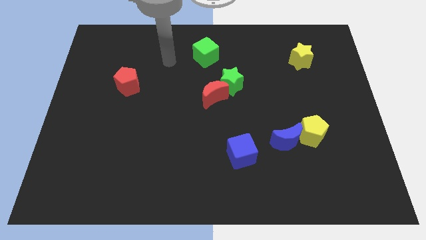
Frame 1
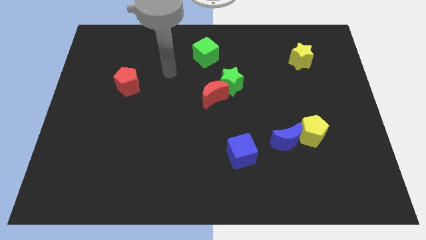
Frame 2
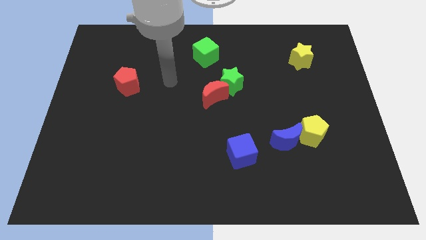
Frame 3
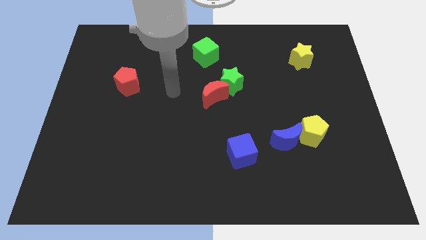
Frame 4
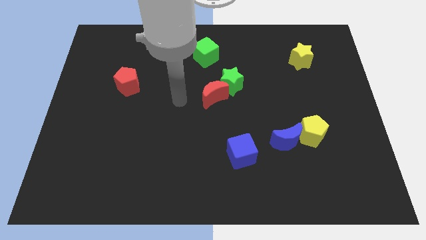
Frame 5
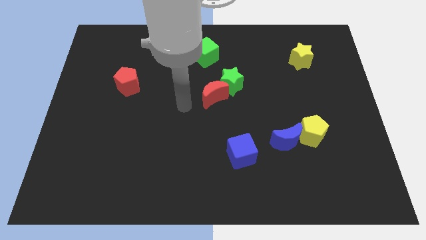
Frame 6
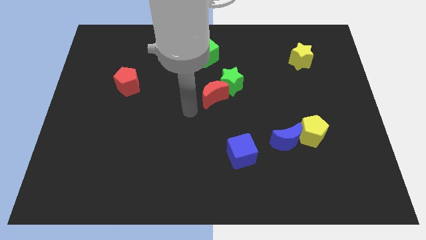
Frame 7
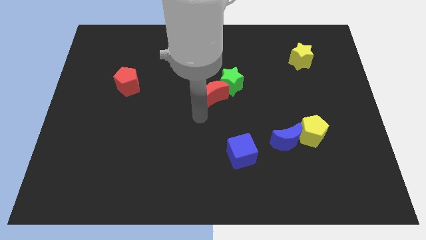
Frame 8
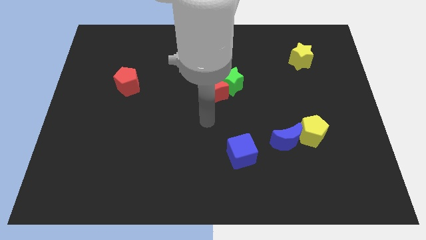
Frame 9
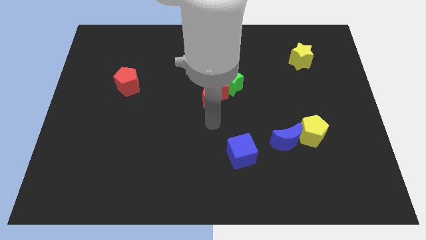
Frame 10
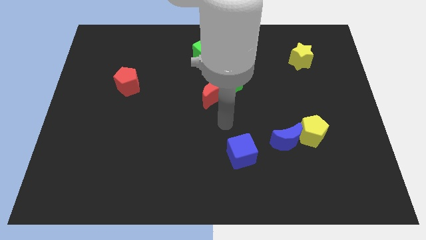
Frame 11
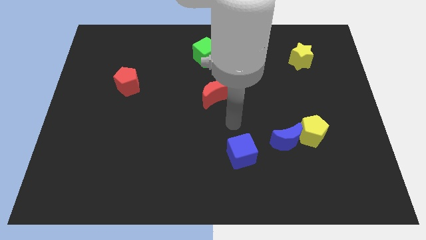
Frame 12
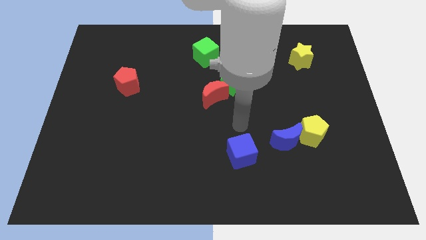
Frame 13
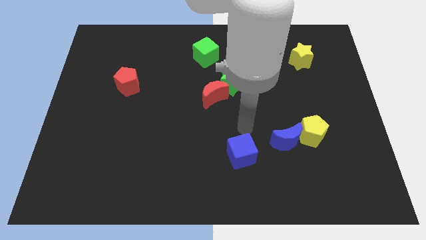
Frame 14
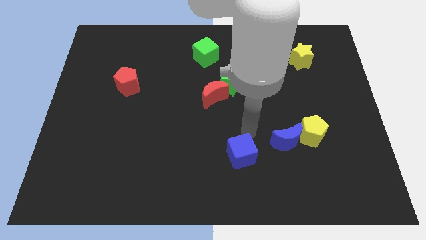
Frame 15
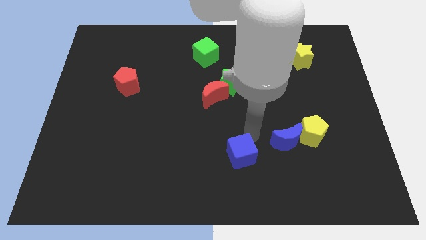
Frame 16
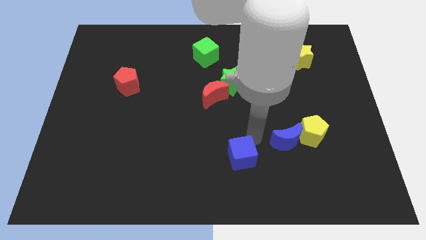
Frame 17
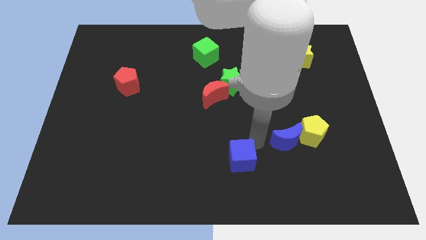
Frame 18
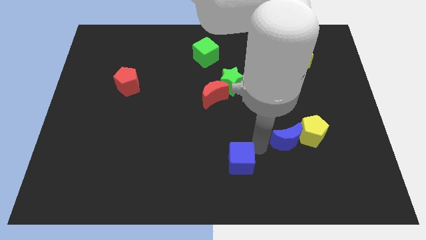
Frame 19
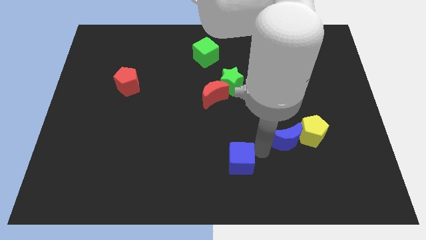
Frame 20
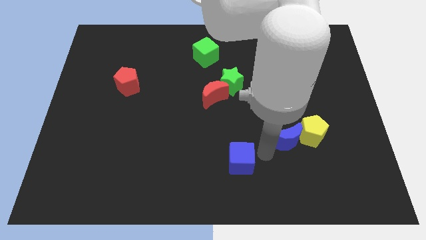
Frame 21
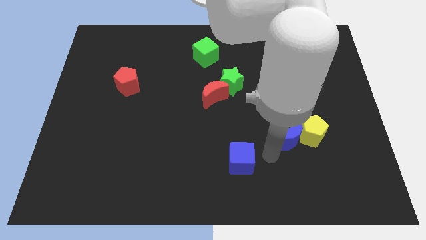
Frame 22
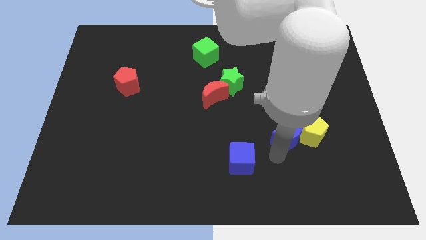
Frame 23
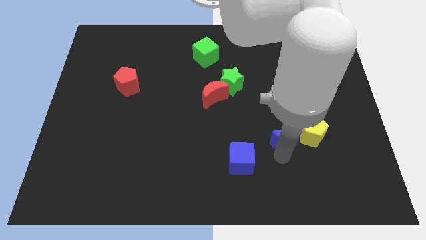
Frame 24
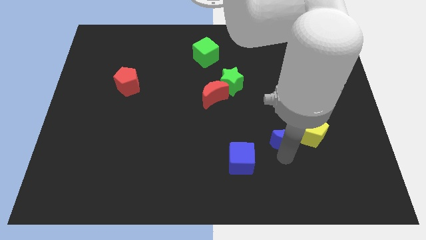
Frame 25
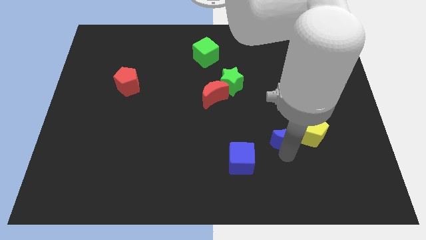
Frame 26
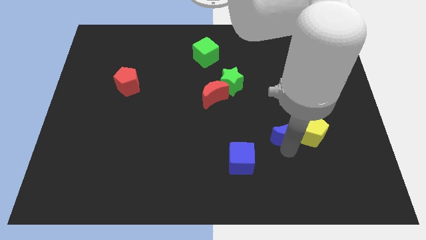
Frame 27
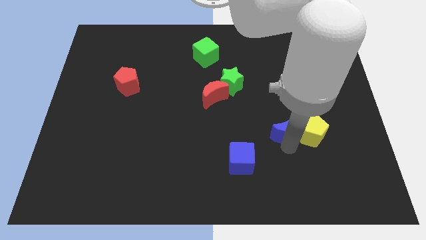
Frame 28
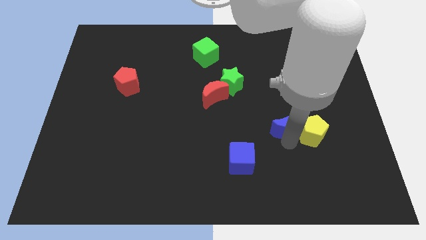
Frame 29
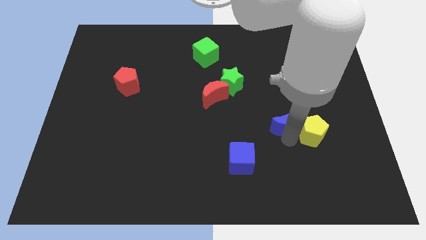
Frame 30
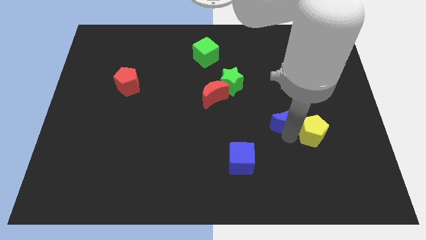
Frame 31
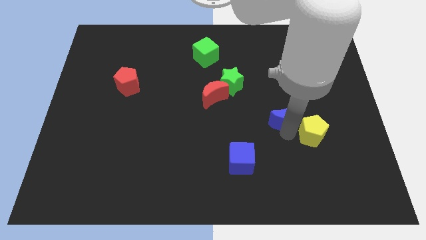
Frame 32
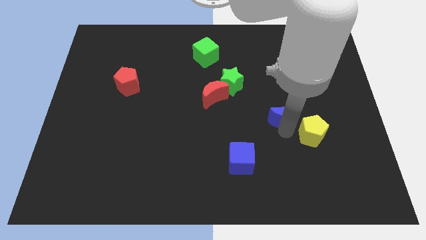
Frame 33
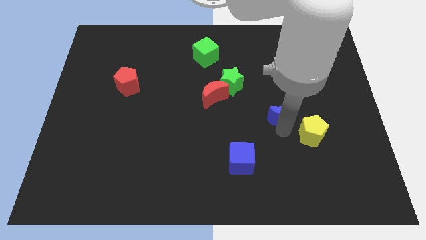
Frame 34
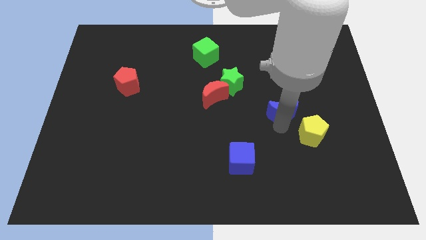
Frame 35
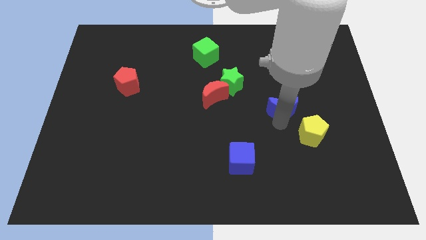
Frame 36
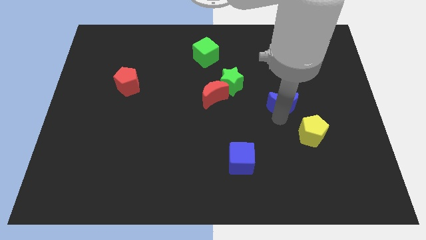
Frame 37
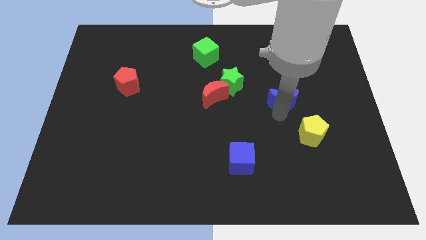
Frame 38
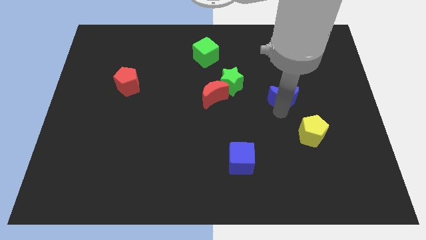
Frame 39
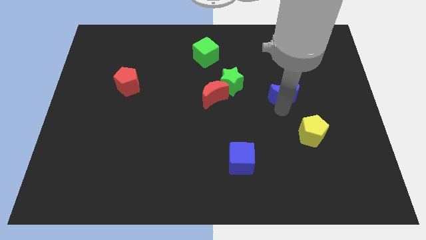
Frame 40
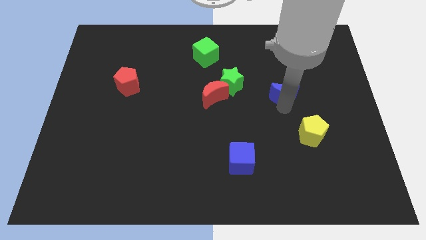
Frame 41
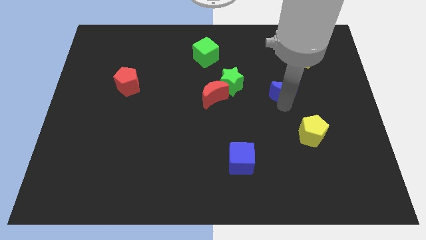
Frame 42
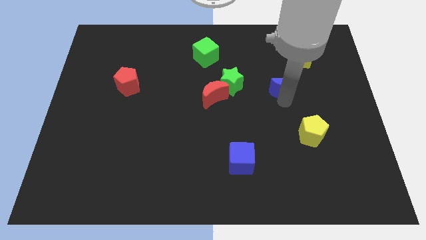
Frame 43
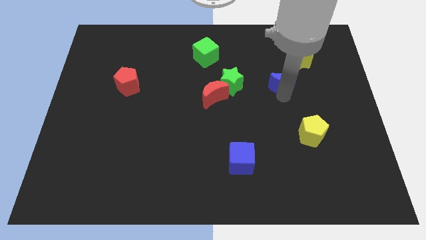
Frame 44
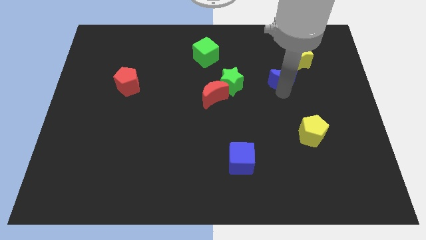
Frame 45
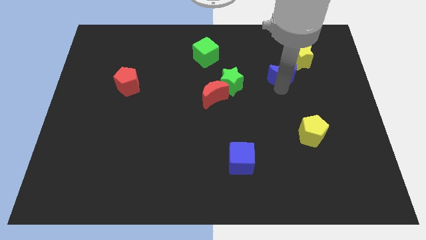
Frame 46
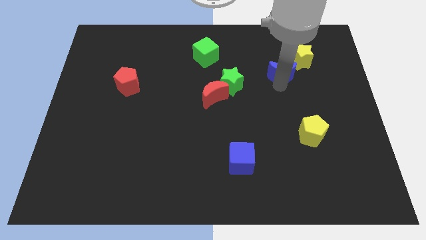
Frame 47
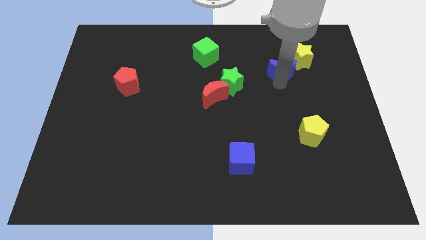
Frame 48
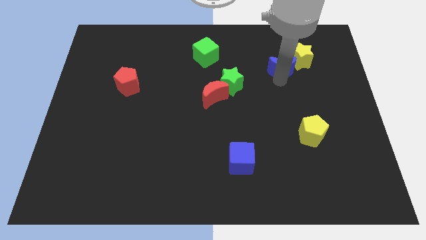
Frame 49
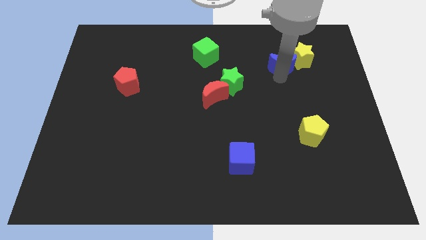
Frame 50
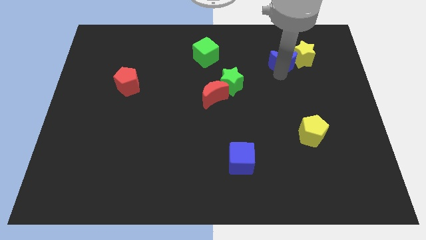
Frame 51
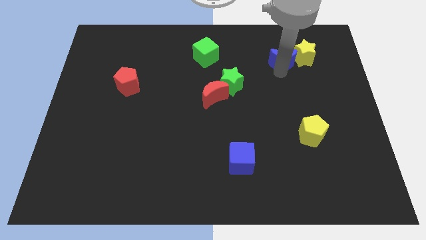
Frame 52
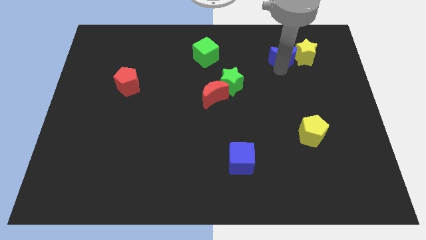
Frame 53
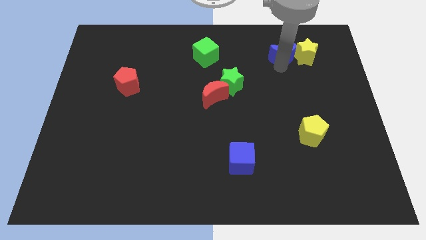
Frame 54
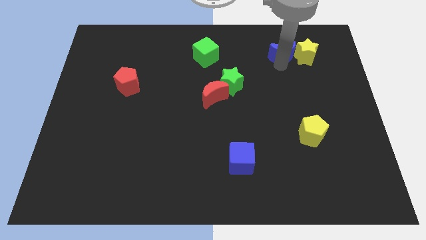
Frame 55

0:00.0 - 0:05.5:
move the blue moon to the yellow star

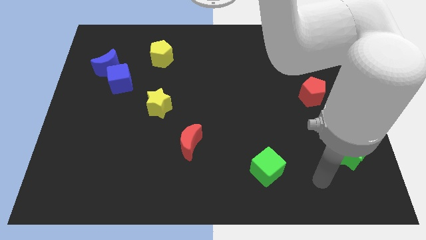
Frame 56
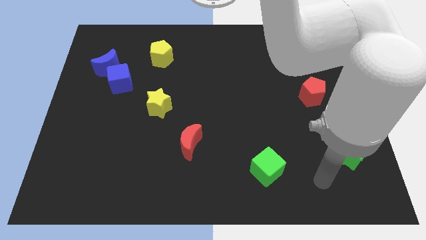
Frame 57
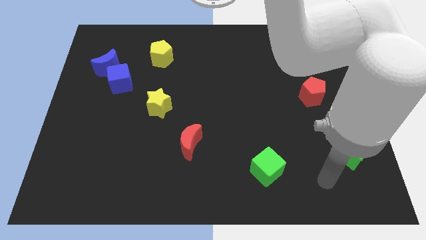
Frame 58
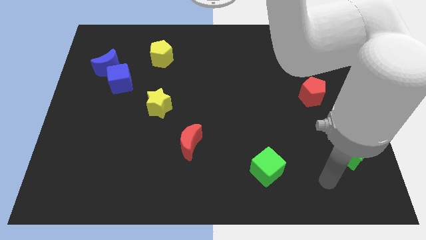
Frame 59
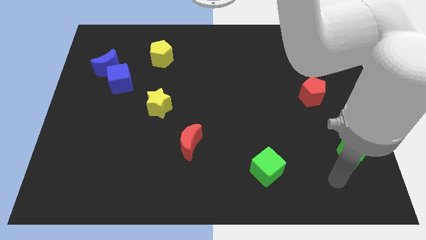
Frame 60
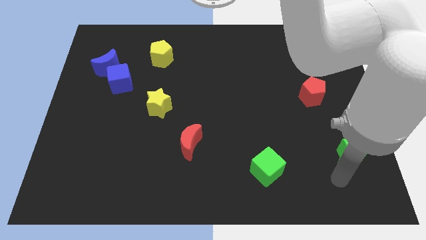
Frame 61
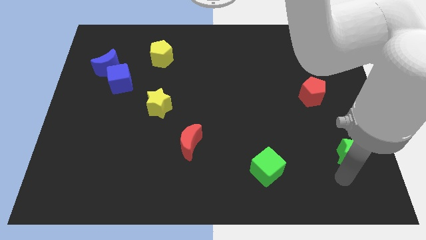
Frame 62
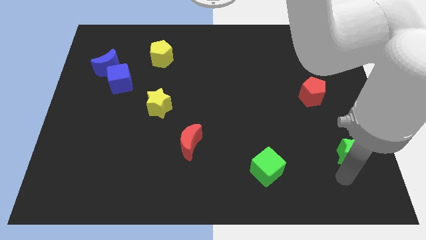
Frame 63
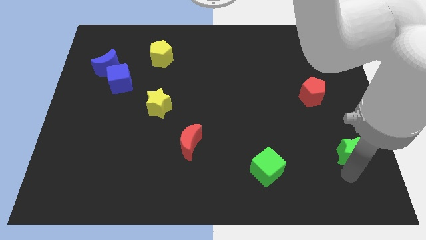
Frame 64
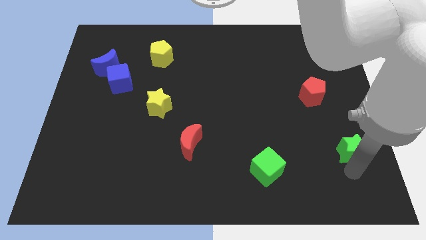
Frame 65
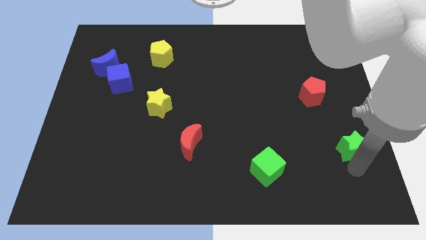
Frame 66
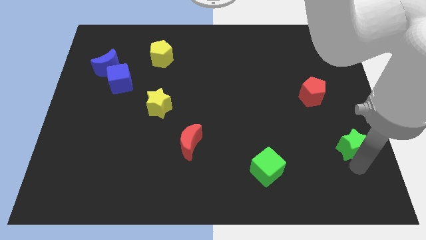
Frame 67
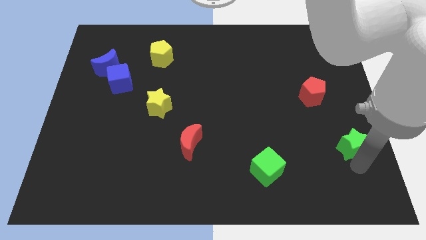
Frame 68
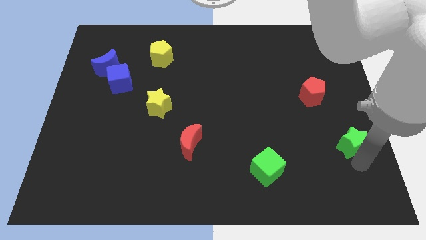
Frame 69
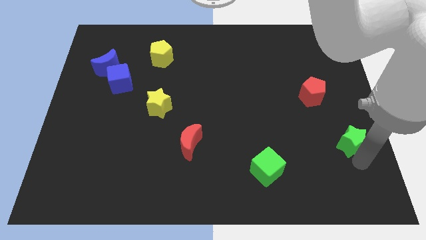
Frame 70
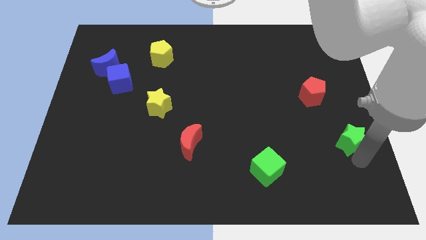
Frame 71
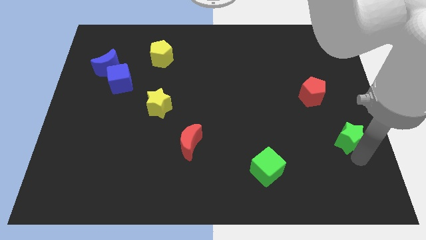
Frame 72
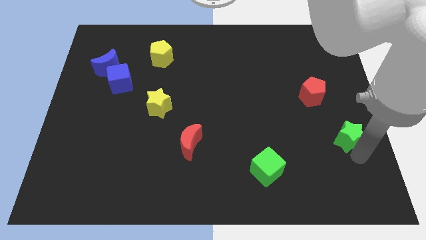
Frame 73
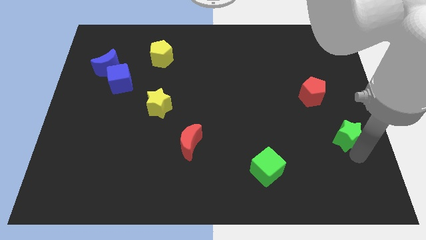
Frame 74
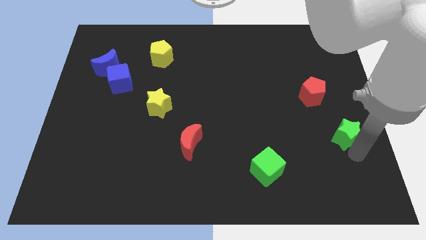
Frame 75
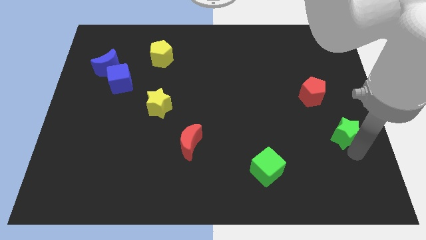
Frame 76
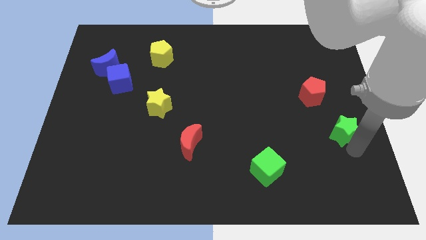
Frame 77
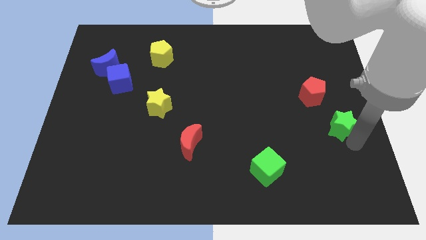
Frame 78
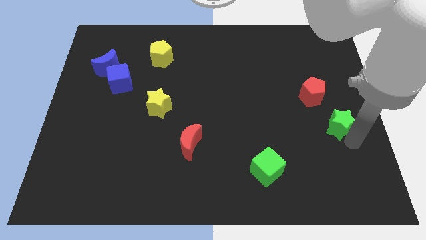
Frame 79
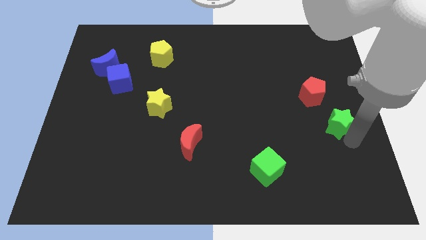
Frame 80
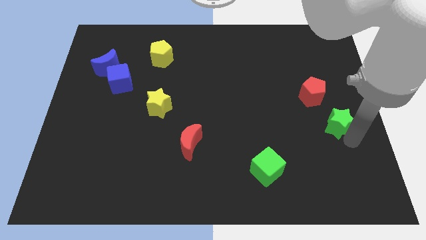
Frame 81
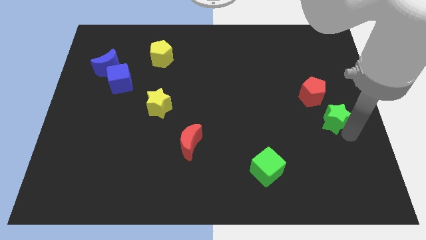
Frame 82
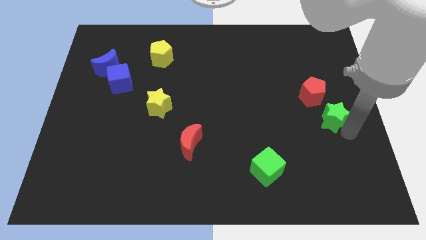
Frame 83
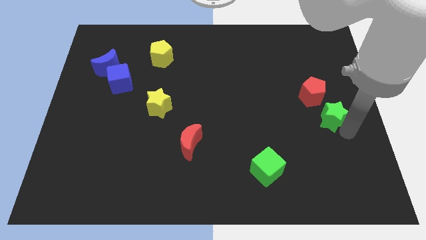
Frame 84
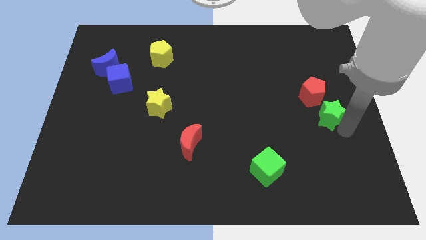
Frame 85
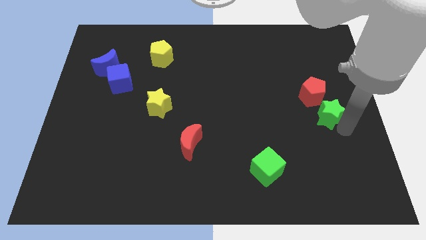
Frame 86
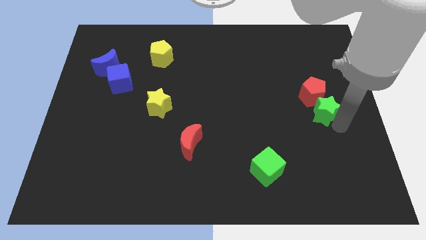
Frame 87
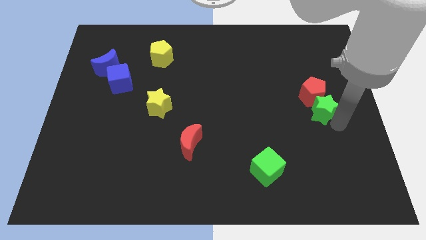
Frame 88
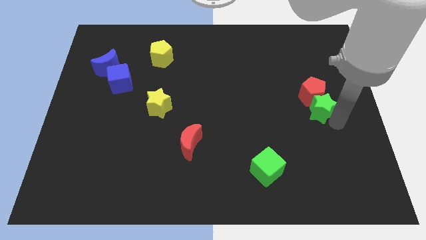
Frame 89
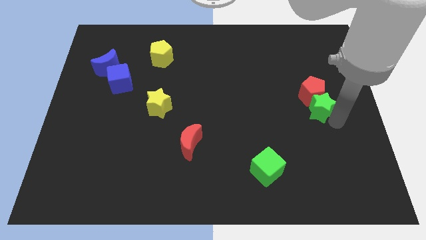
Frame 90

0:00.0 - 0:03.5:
push the green star towards the red pentagon
